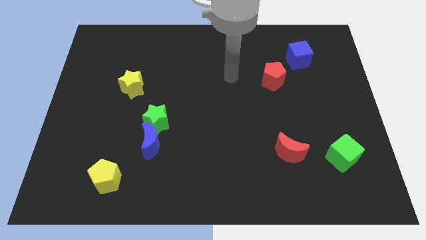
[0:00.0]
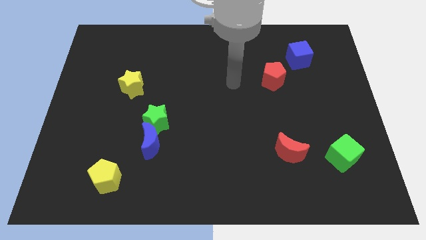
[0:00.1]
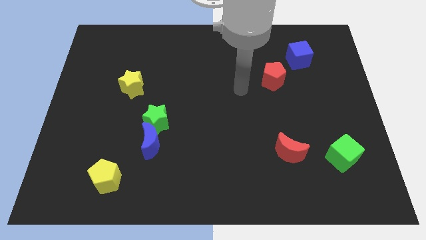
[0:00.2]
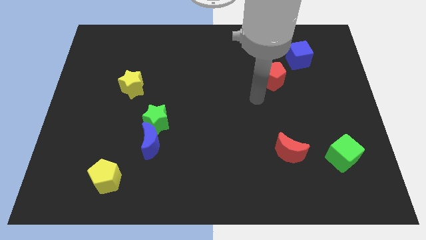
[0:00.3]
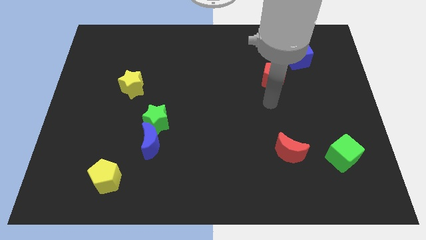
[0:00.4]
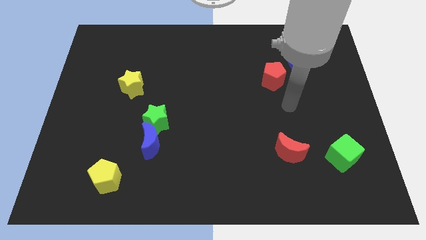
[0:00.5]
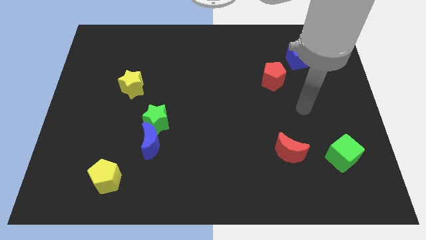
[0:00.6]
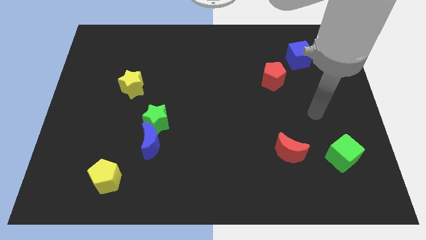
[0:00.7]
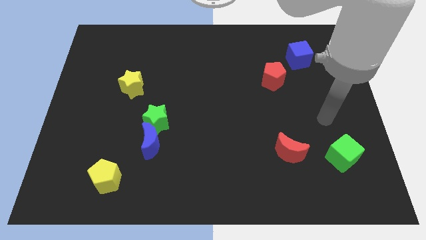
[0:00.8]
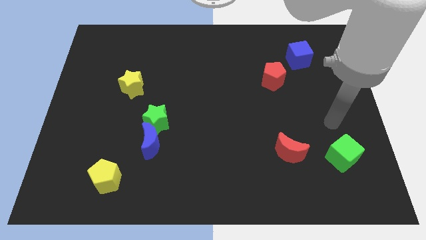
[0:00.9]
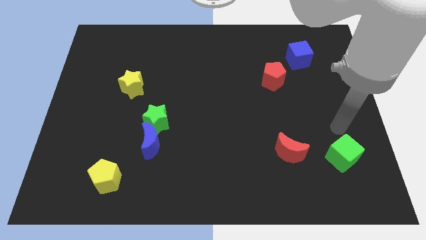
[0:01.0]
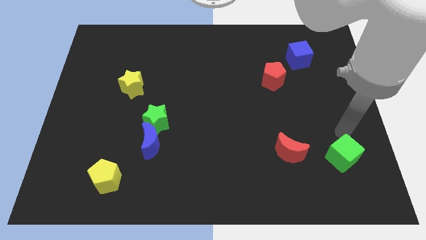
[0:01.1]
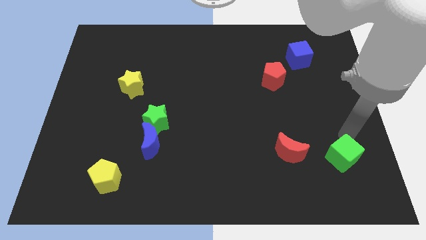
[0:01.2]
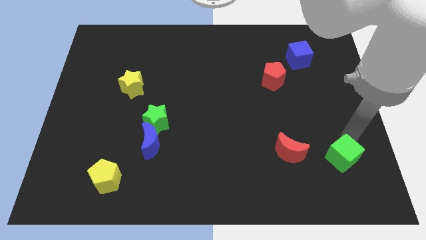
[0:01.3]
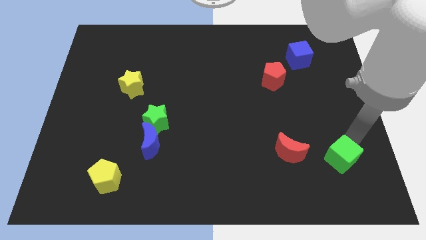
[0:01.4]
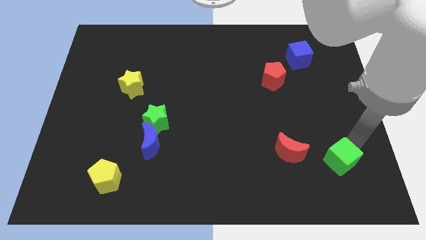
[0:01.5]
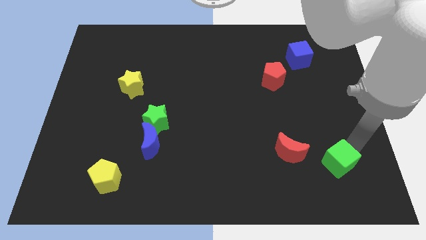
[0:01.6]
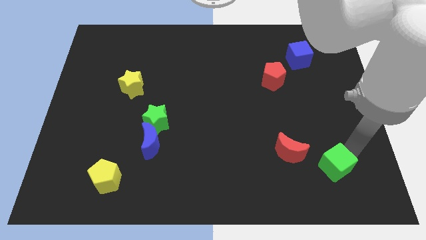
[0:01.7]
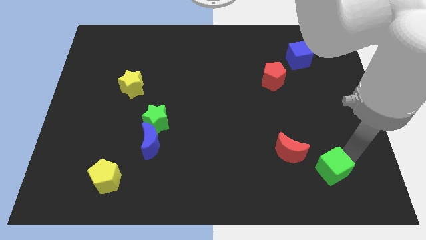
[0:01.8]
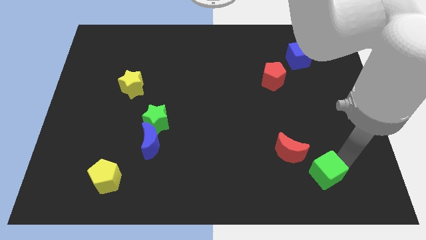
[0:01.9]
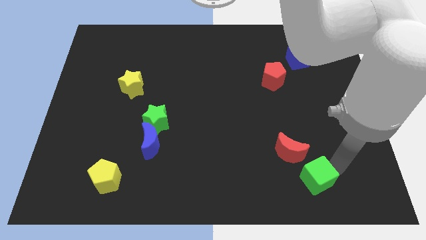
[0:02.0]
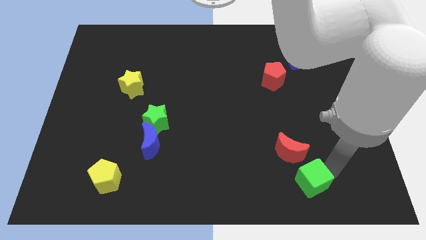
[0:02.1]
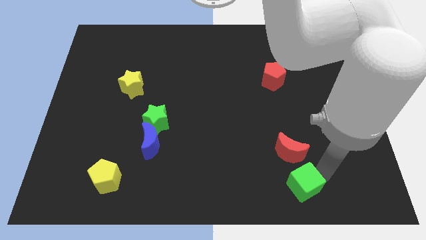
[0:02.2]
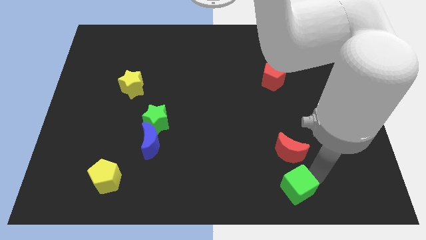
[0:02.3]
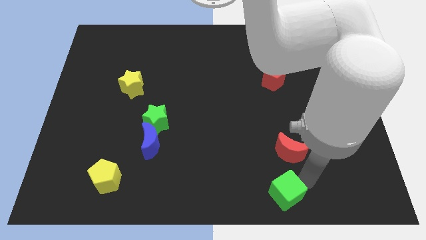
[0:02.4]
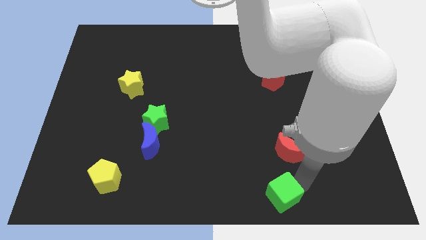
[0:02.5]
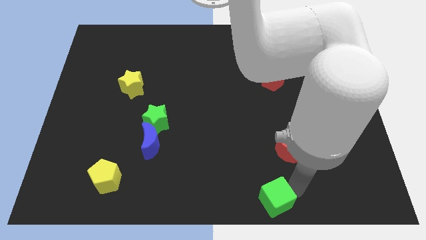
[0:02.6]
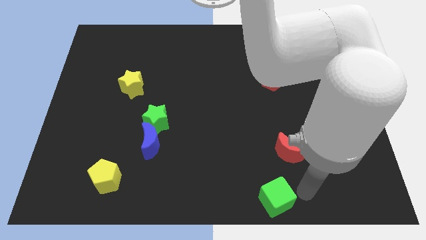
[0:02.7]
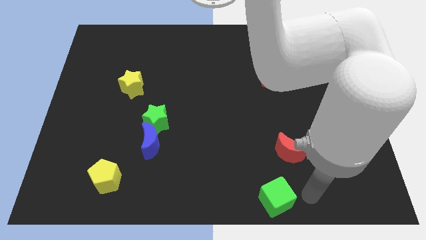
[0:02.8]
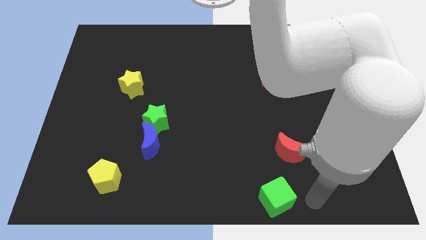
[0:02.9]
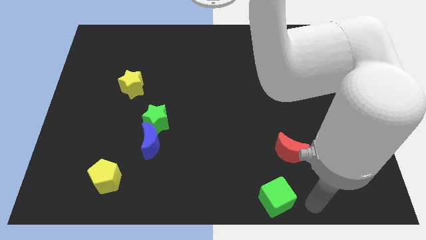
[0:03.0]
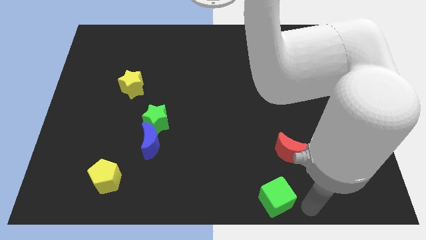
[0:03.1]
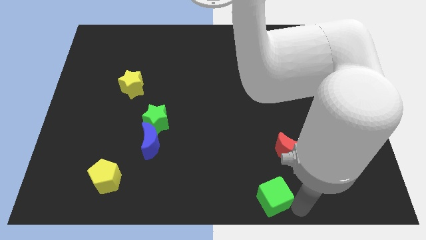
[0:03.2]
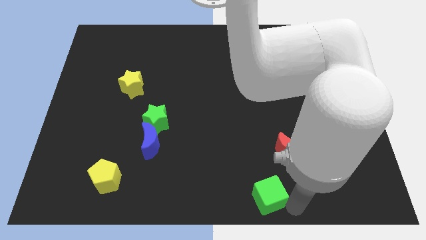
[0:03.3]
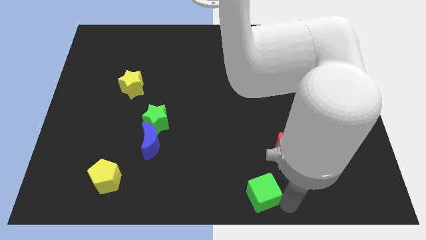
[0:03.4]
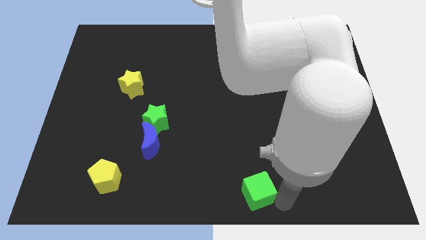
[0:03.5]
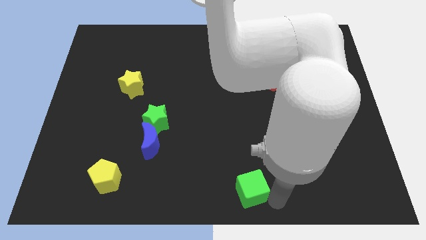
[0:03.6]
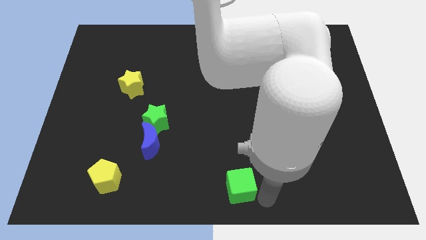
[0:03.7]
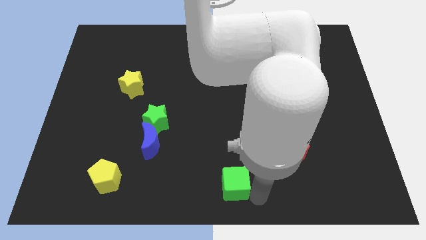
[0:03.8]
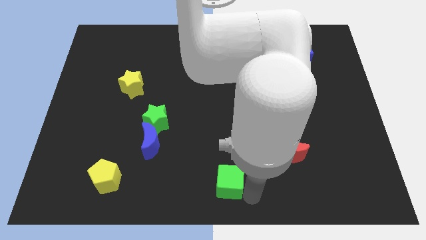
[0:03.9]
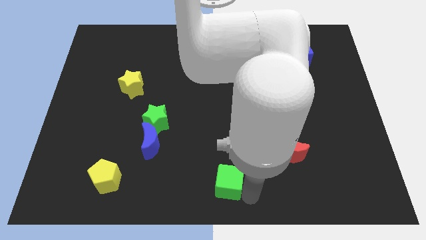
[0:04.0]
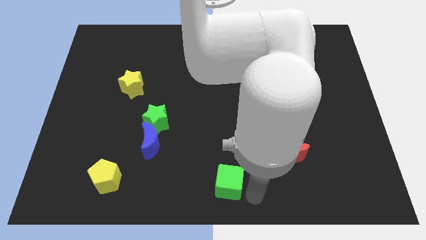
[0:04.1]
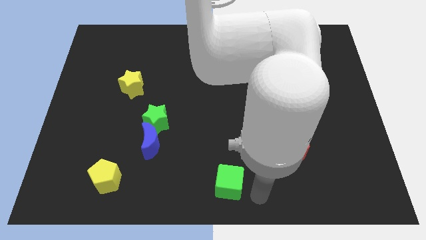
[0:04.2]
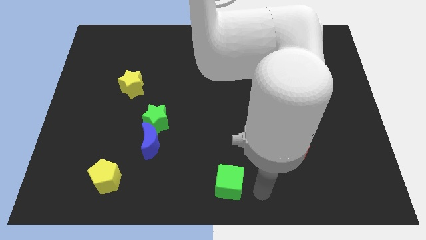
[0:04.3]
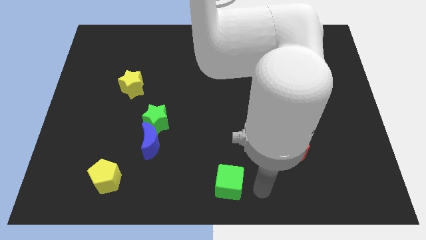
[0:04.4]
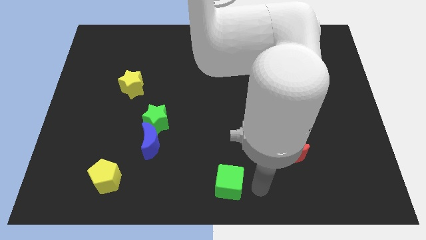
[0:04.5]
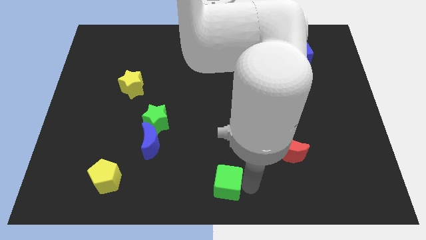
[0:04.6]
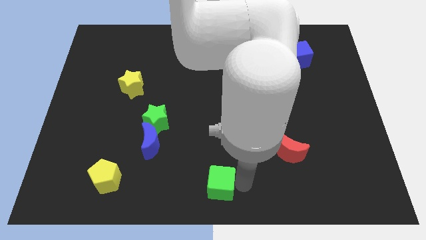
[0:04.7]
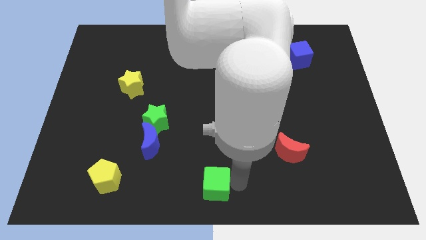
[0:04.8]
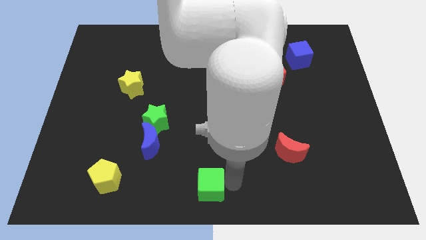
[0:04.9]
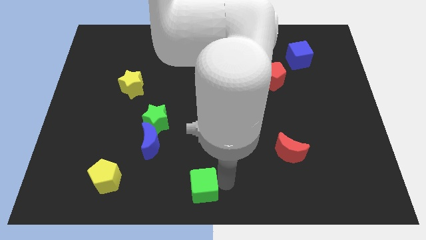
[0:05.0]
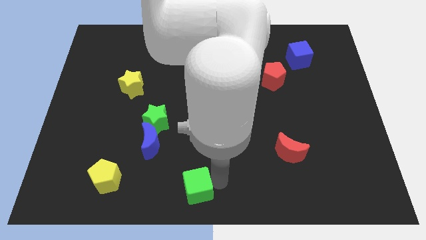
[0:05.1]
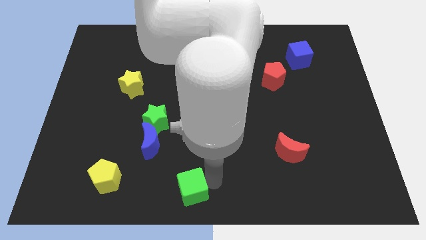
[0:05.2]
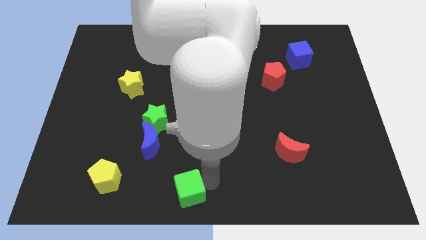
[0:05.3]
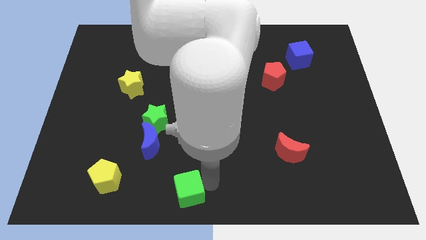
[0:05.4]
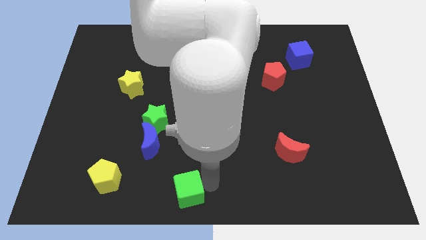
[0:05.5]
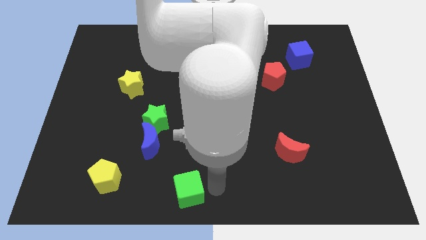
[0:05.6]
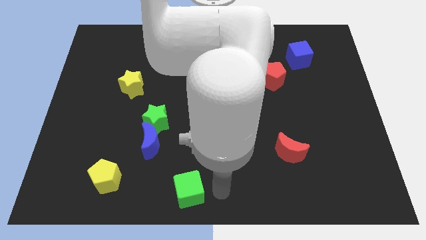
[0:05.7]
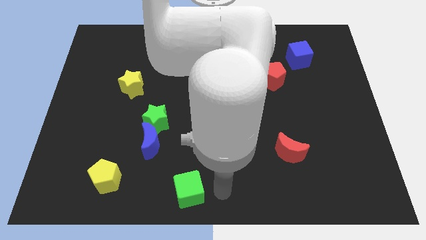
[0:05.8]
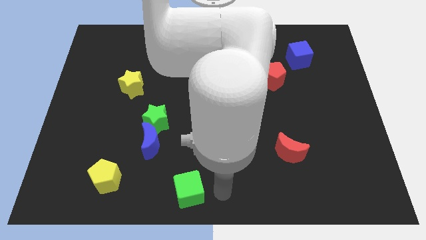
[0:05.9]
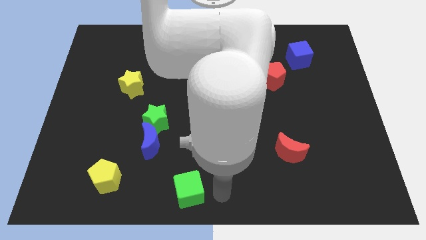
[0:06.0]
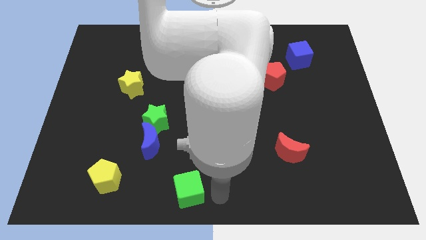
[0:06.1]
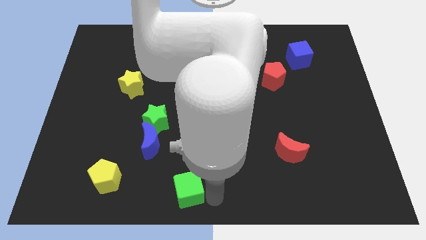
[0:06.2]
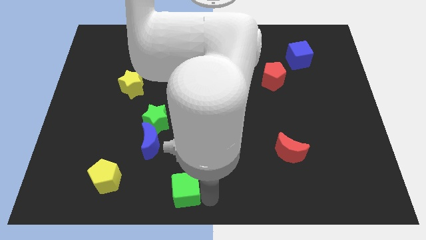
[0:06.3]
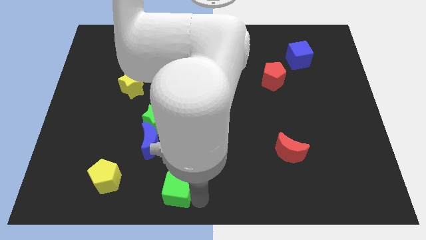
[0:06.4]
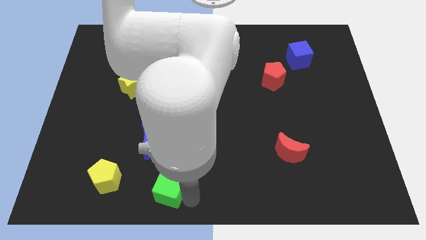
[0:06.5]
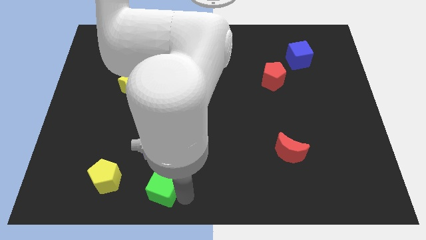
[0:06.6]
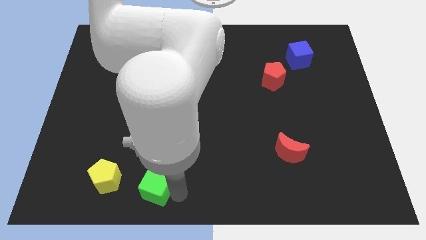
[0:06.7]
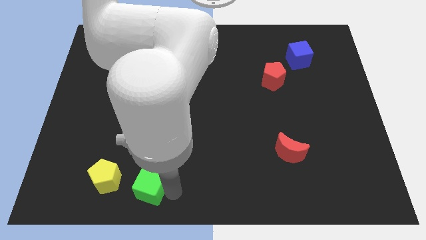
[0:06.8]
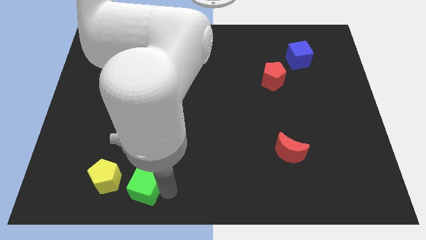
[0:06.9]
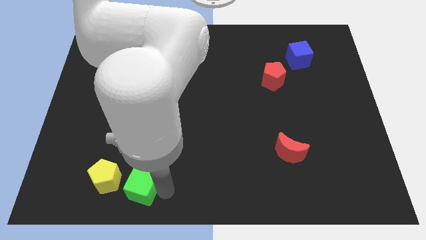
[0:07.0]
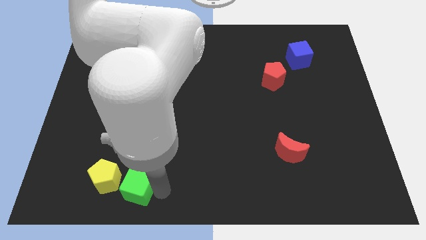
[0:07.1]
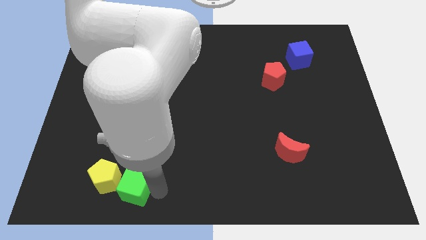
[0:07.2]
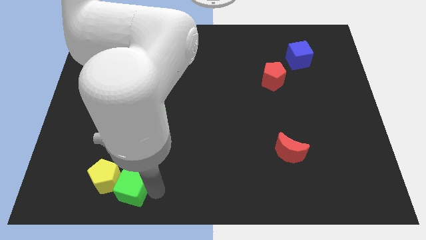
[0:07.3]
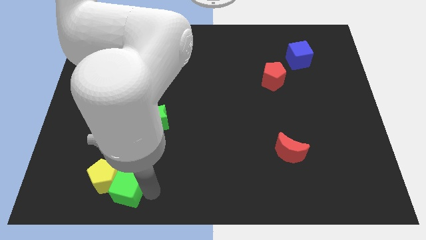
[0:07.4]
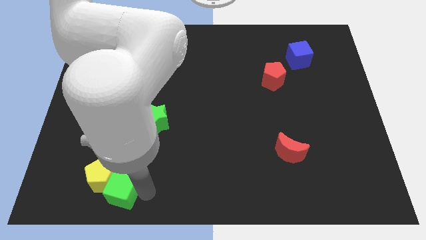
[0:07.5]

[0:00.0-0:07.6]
push the green cube close to the yellow pentagon

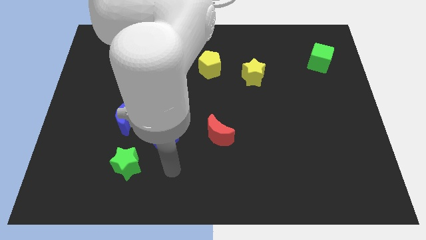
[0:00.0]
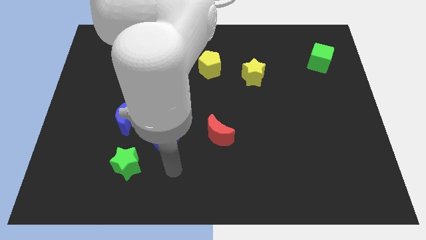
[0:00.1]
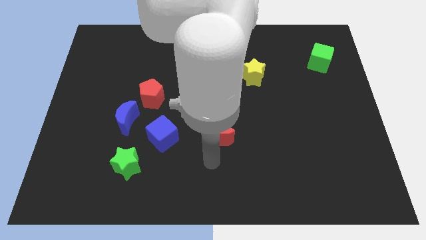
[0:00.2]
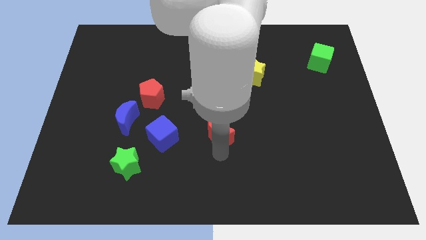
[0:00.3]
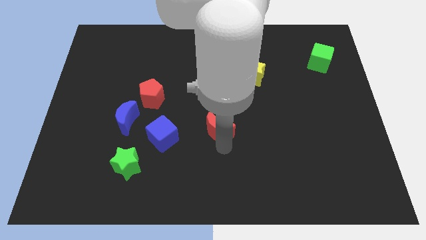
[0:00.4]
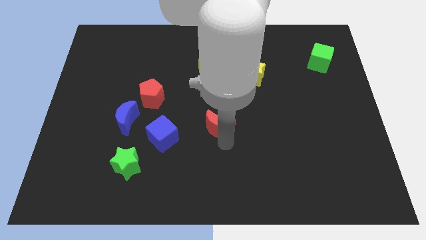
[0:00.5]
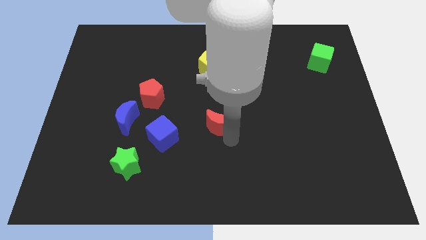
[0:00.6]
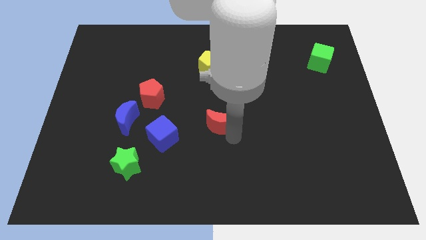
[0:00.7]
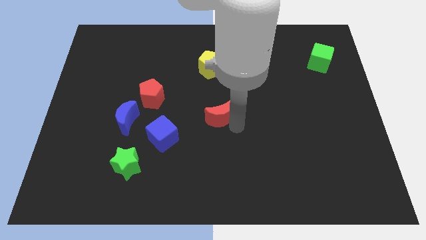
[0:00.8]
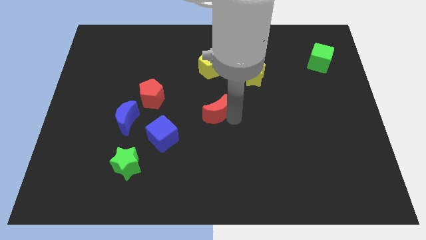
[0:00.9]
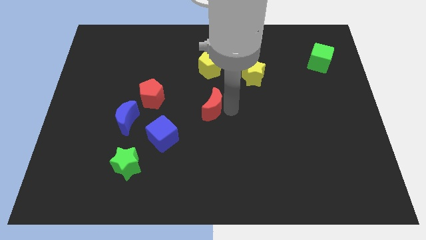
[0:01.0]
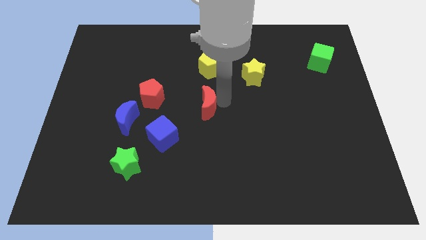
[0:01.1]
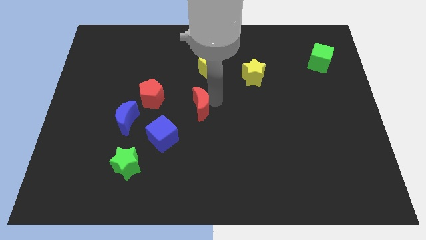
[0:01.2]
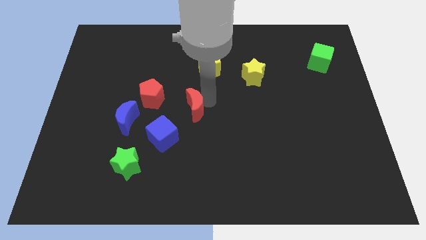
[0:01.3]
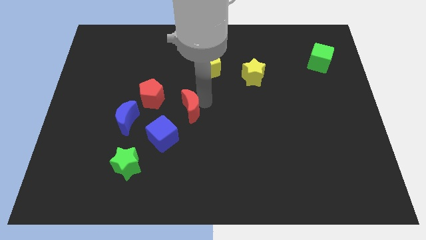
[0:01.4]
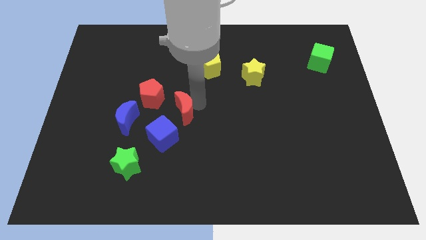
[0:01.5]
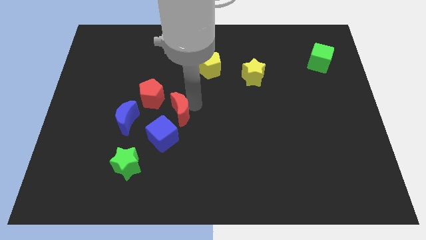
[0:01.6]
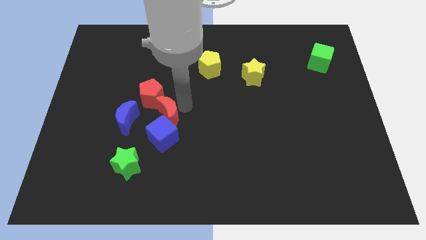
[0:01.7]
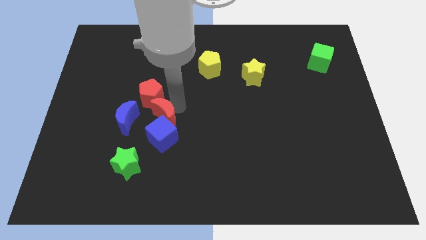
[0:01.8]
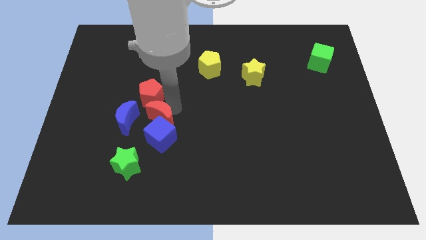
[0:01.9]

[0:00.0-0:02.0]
put the red moon close to the blue cube
